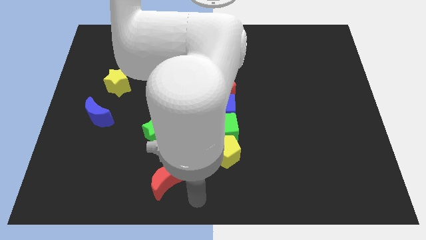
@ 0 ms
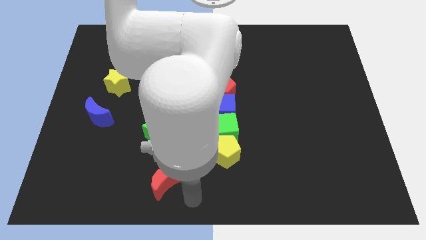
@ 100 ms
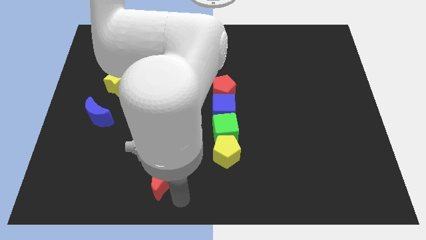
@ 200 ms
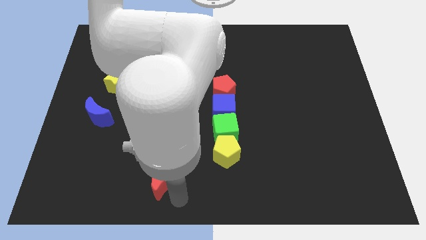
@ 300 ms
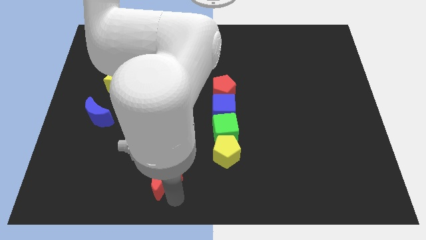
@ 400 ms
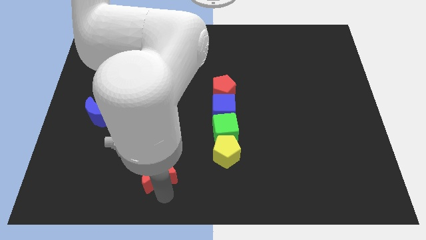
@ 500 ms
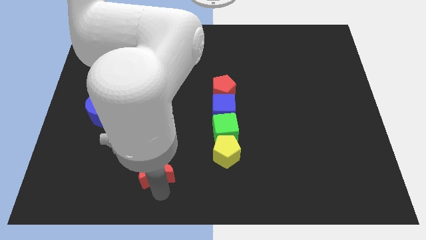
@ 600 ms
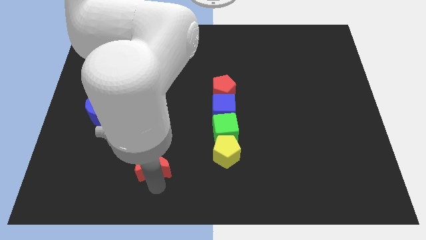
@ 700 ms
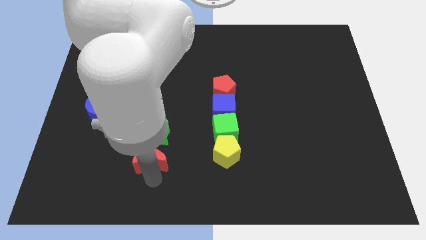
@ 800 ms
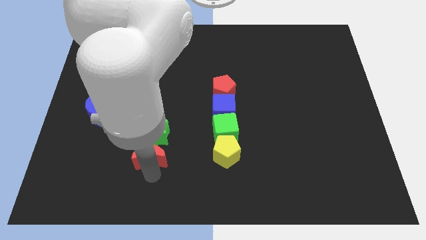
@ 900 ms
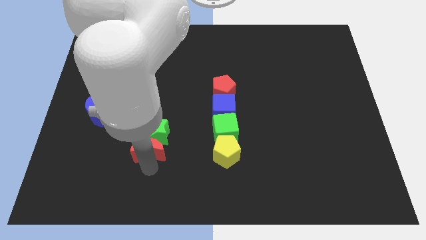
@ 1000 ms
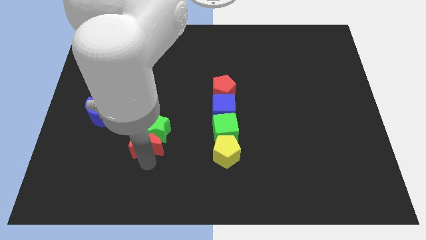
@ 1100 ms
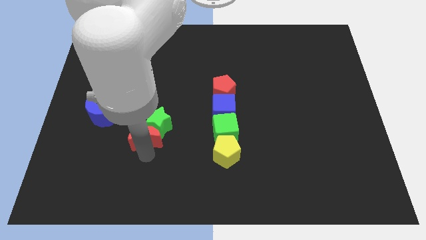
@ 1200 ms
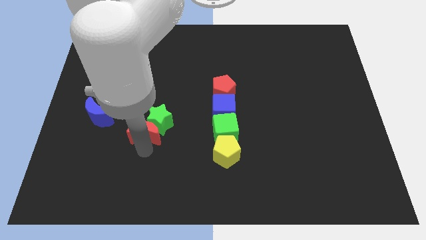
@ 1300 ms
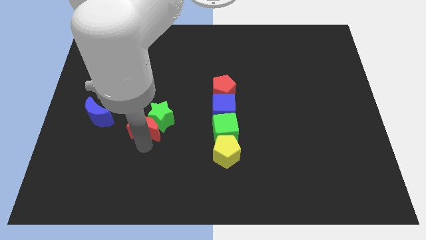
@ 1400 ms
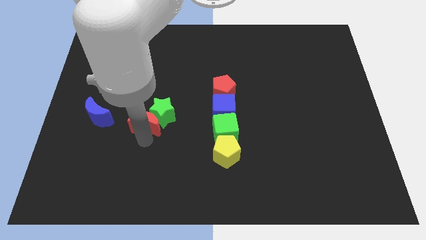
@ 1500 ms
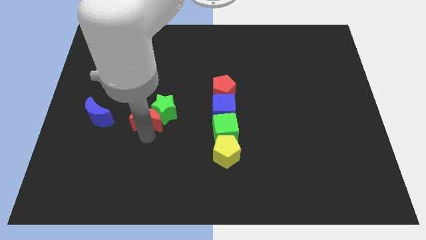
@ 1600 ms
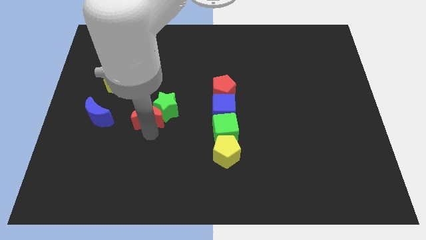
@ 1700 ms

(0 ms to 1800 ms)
place the red crescent and green star together at the right side of the blue crescent

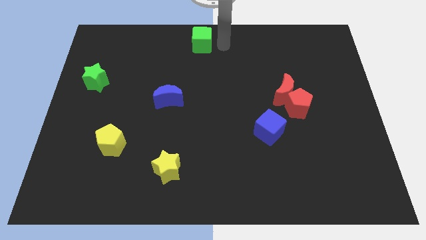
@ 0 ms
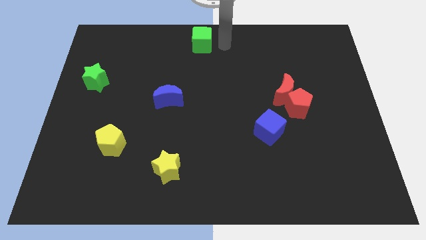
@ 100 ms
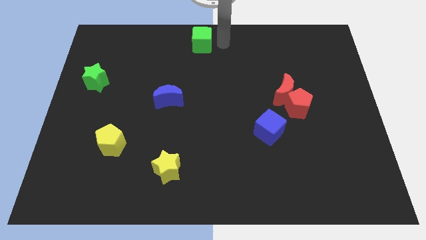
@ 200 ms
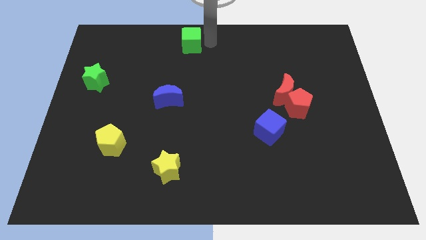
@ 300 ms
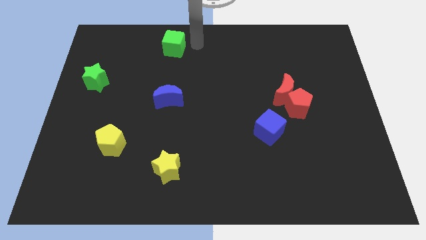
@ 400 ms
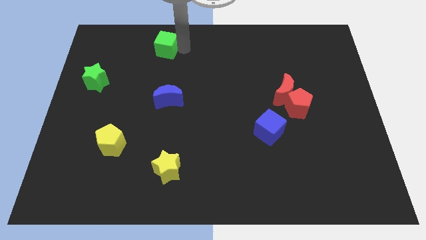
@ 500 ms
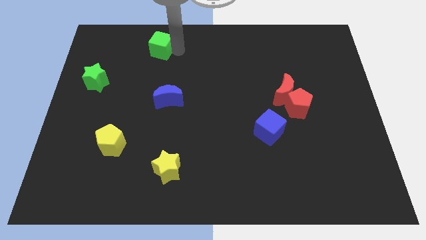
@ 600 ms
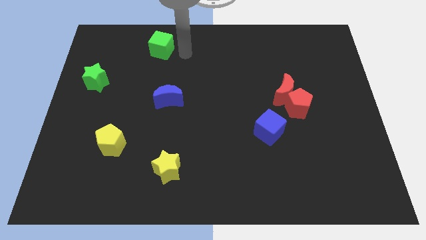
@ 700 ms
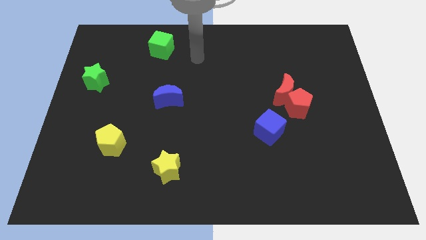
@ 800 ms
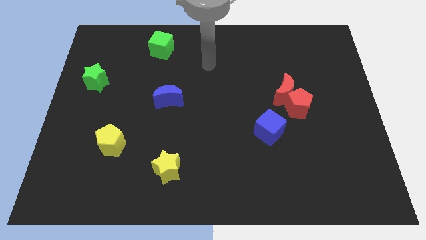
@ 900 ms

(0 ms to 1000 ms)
move the green cube to the left

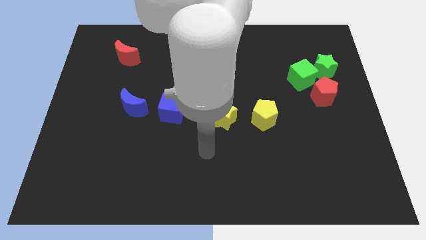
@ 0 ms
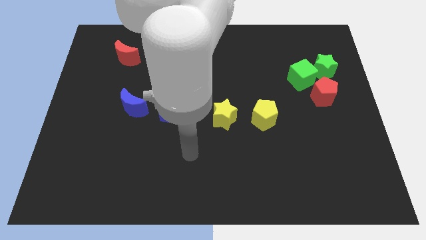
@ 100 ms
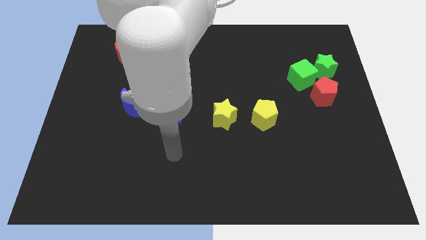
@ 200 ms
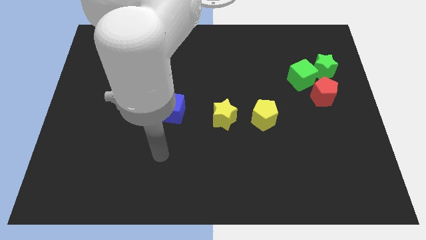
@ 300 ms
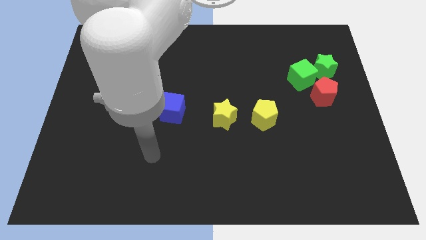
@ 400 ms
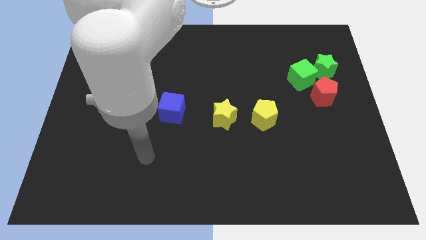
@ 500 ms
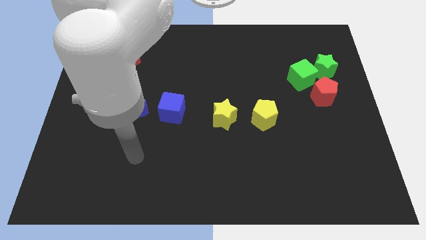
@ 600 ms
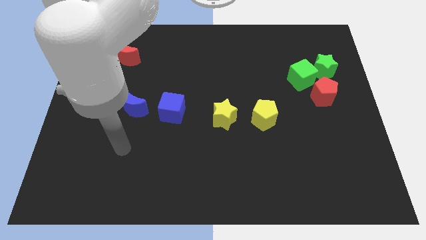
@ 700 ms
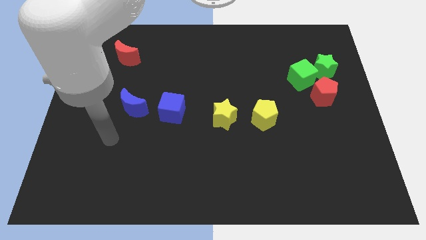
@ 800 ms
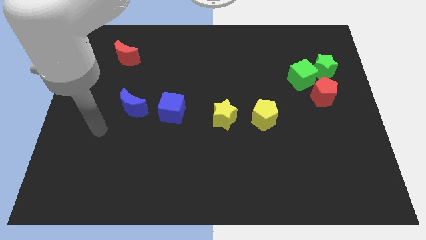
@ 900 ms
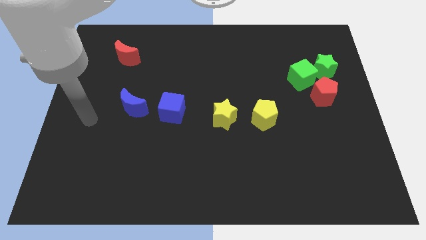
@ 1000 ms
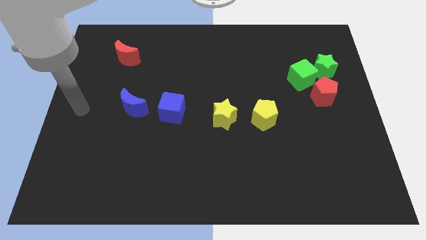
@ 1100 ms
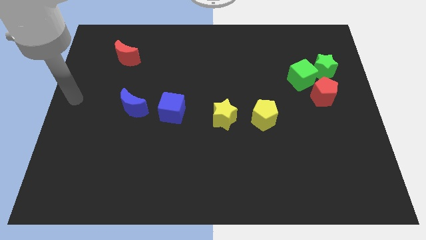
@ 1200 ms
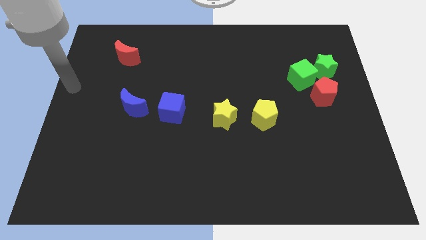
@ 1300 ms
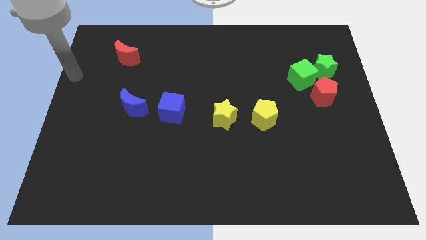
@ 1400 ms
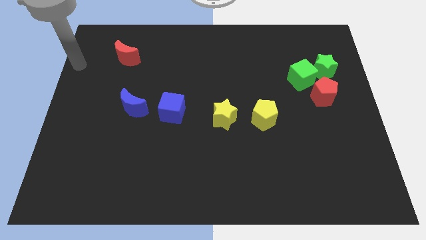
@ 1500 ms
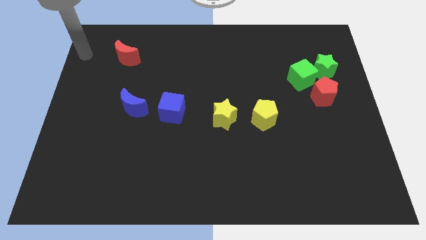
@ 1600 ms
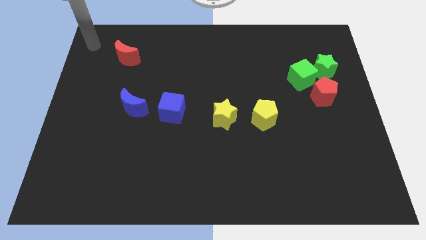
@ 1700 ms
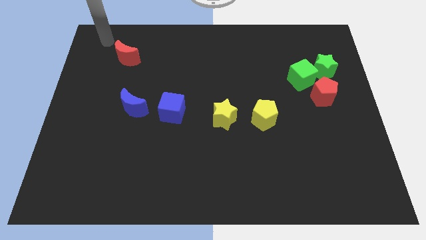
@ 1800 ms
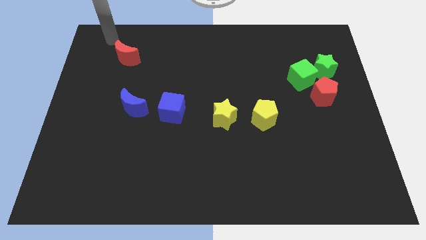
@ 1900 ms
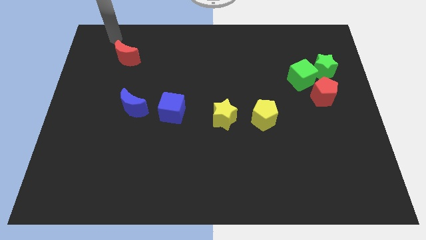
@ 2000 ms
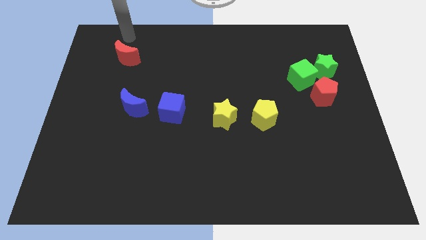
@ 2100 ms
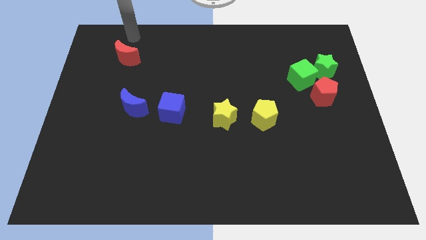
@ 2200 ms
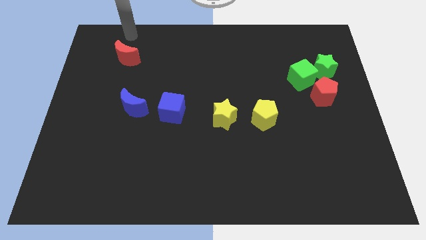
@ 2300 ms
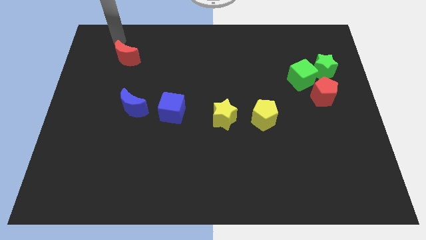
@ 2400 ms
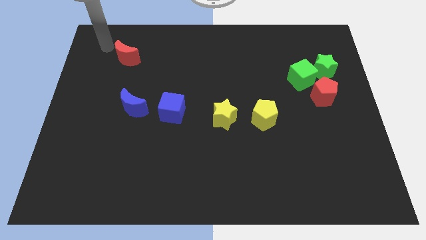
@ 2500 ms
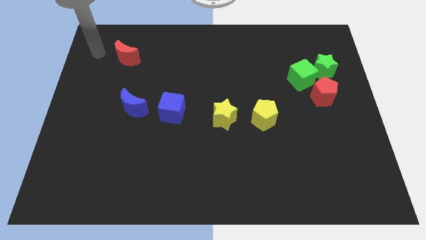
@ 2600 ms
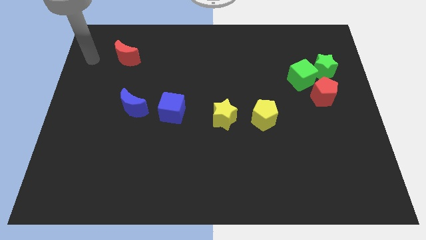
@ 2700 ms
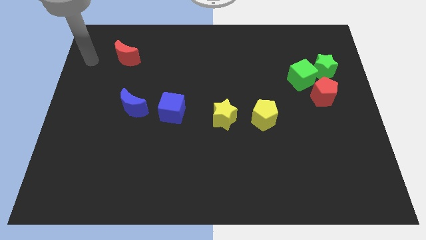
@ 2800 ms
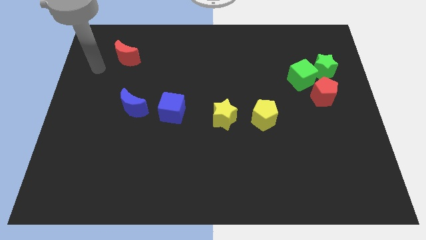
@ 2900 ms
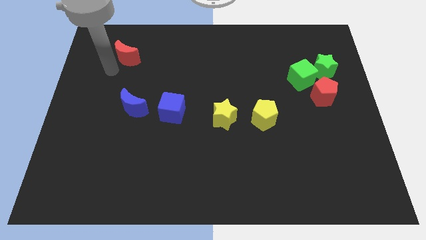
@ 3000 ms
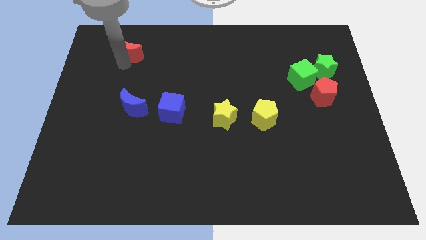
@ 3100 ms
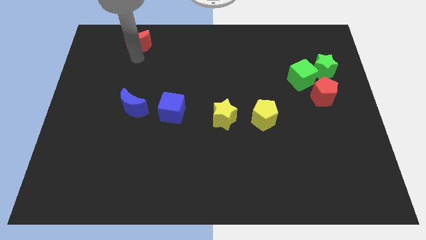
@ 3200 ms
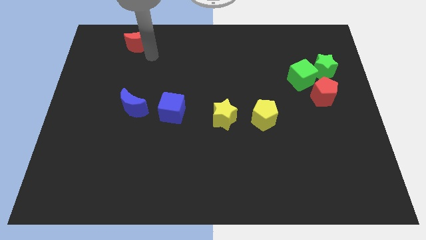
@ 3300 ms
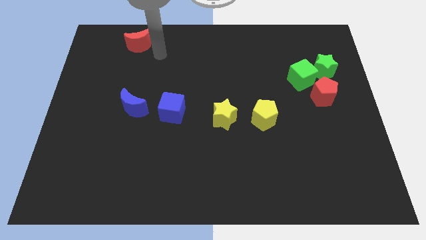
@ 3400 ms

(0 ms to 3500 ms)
move the red crescent towards the top left of the board

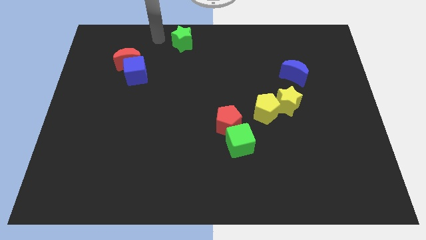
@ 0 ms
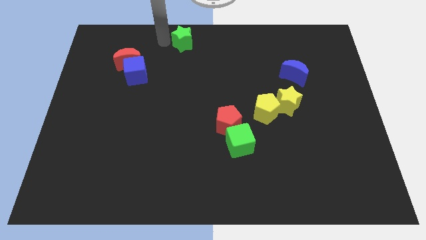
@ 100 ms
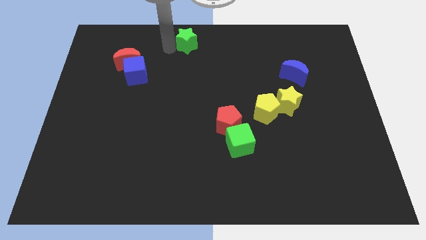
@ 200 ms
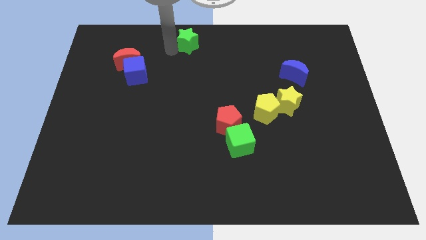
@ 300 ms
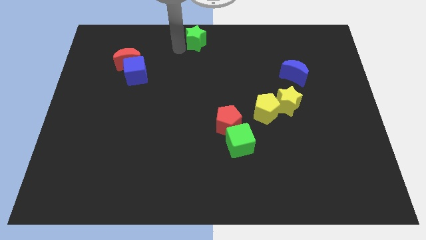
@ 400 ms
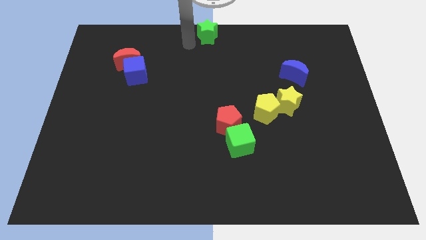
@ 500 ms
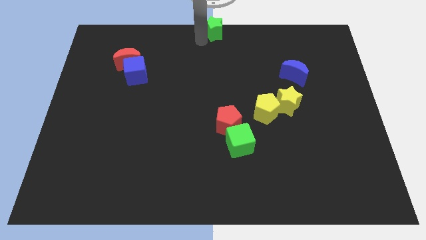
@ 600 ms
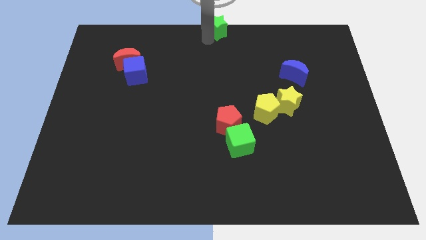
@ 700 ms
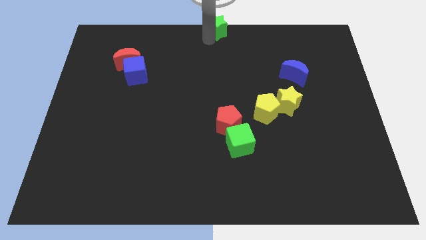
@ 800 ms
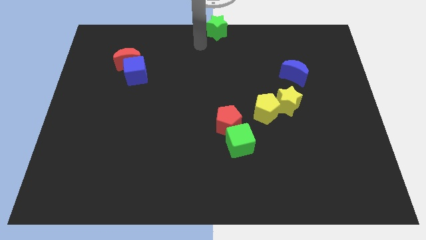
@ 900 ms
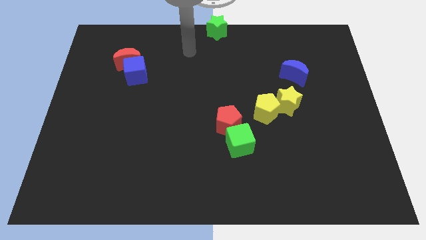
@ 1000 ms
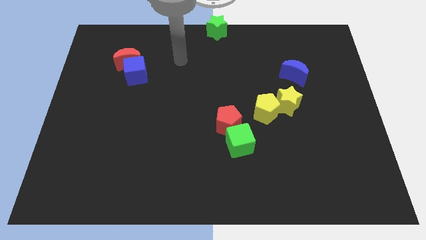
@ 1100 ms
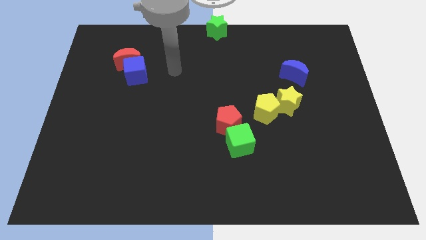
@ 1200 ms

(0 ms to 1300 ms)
put the green star at the top center of the board

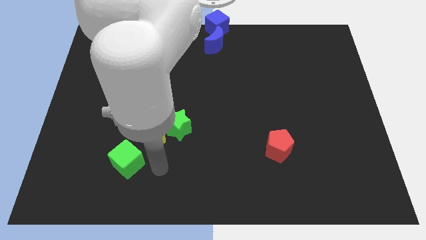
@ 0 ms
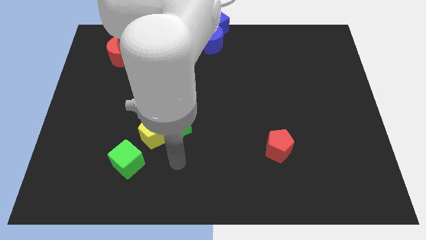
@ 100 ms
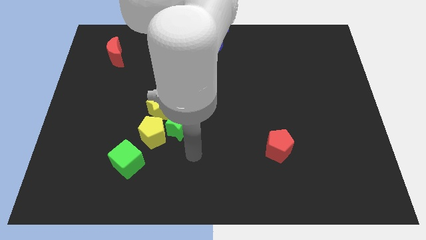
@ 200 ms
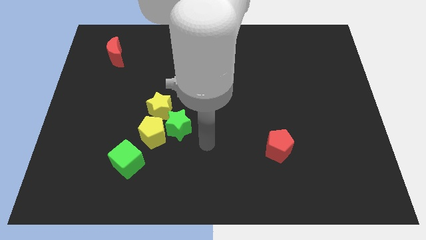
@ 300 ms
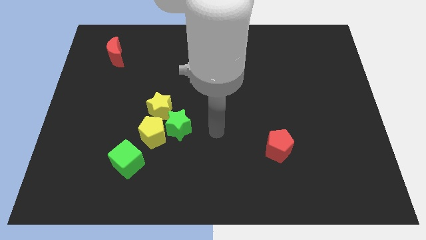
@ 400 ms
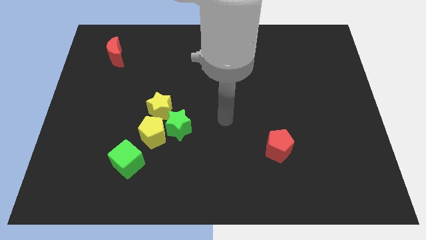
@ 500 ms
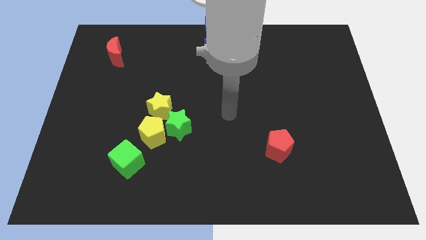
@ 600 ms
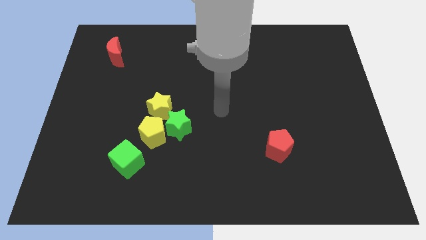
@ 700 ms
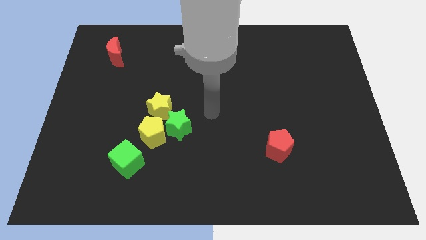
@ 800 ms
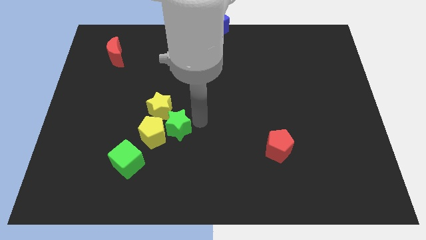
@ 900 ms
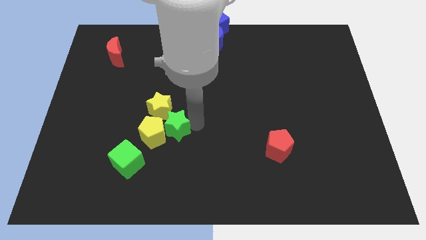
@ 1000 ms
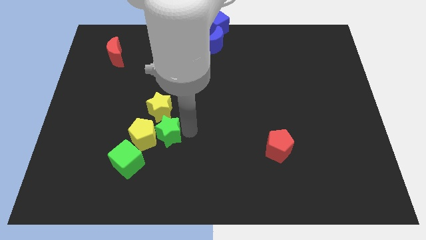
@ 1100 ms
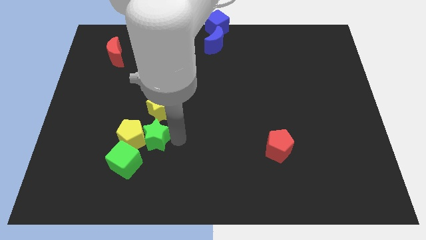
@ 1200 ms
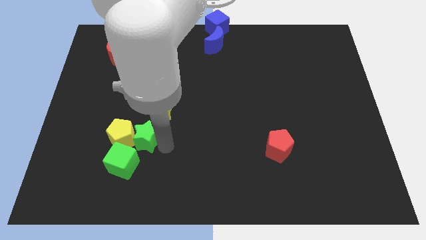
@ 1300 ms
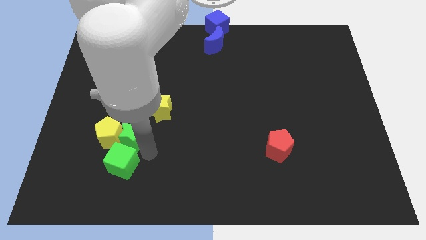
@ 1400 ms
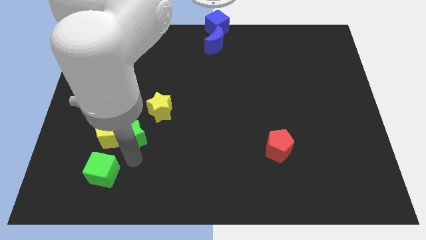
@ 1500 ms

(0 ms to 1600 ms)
push green star into yellow pentagon
